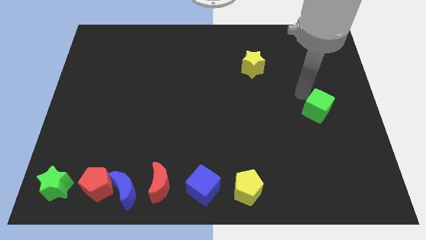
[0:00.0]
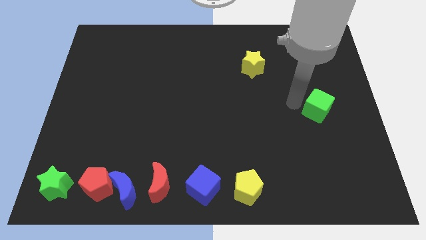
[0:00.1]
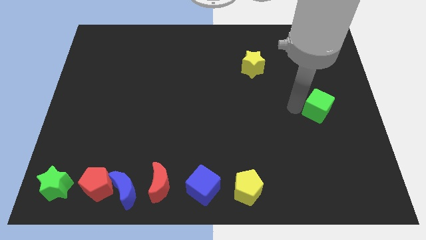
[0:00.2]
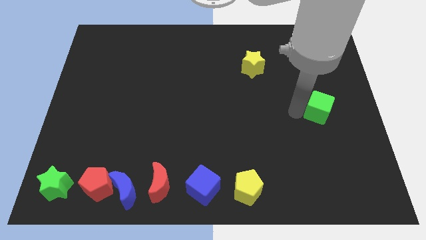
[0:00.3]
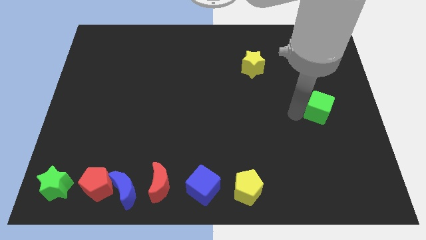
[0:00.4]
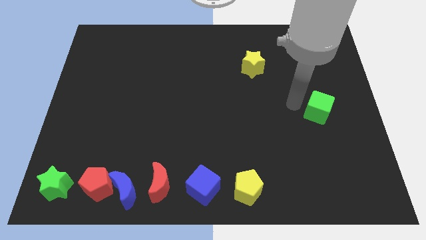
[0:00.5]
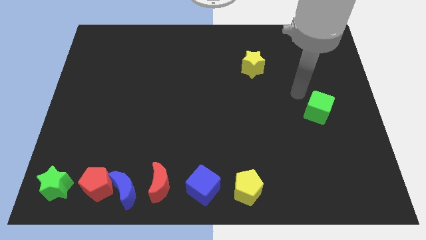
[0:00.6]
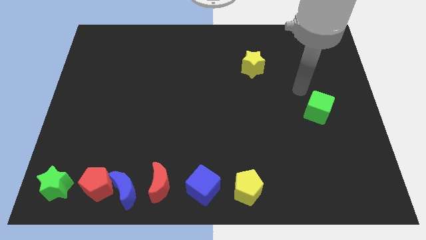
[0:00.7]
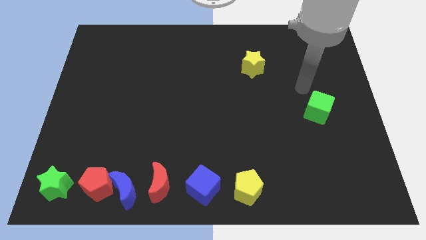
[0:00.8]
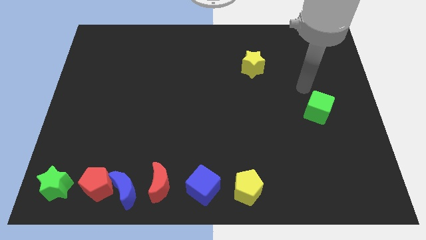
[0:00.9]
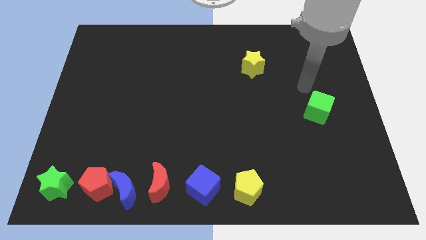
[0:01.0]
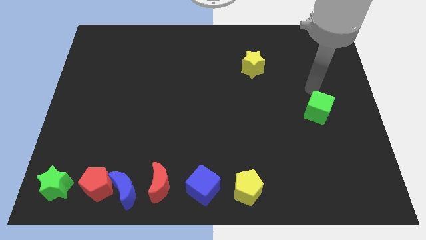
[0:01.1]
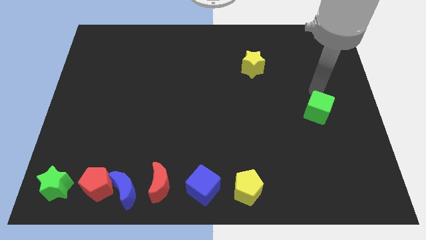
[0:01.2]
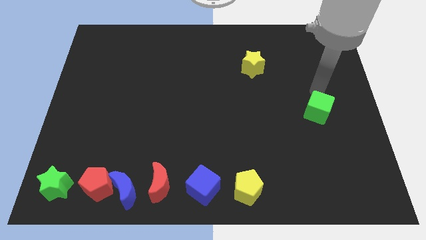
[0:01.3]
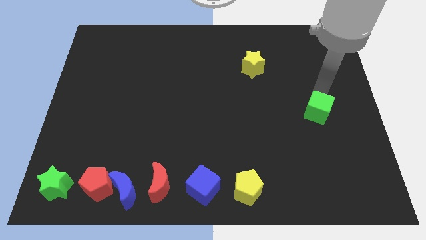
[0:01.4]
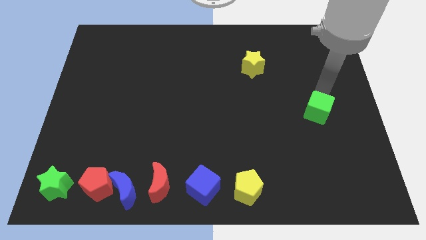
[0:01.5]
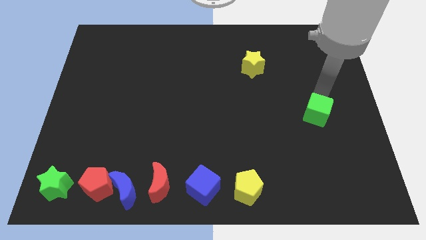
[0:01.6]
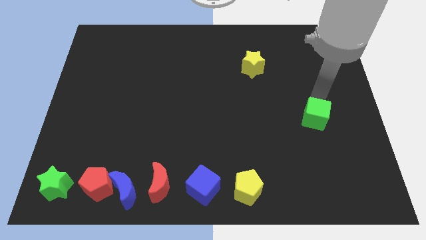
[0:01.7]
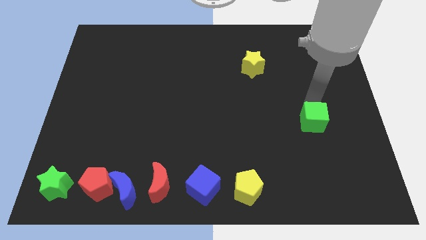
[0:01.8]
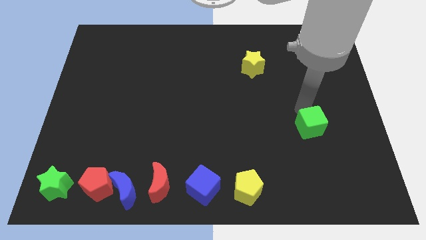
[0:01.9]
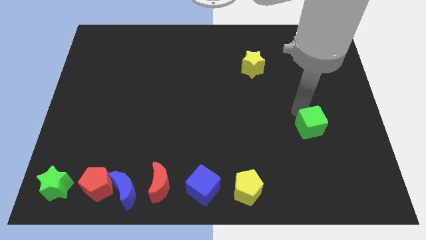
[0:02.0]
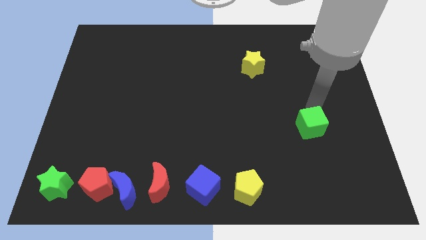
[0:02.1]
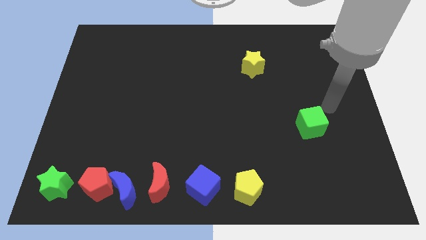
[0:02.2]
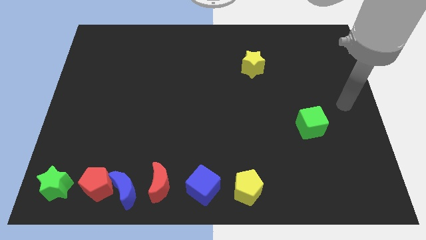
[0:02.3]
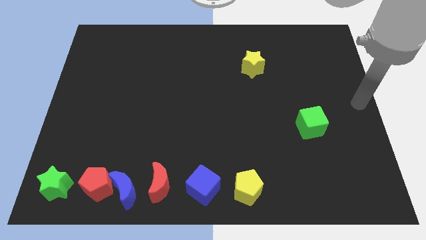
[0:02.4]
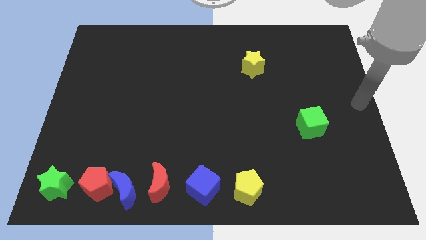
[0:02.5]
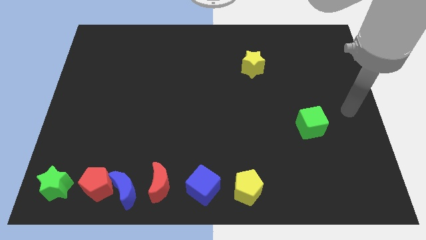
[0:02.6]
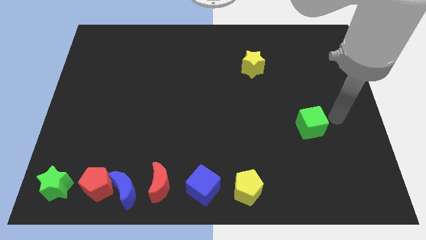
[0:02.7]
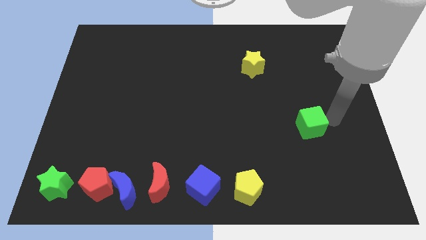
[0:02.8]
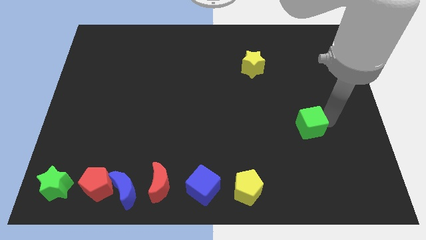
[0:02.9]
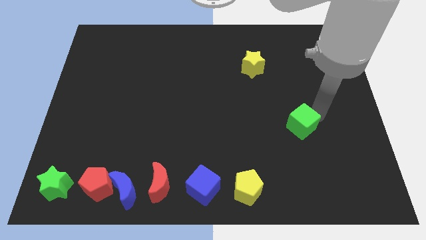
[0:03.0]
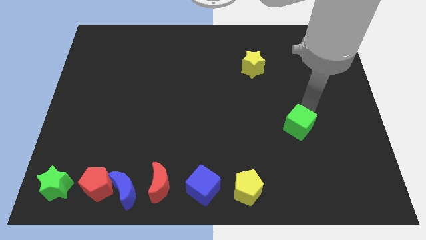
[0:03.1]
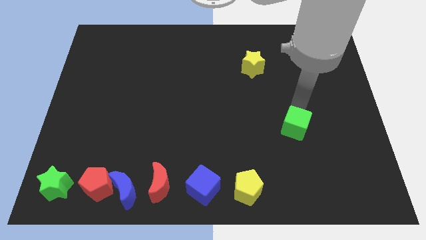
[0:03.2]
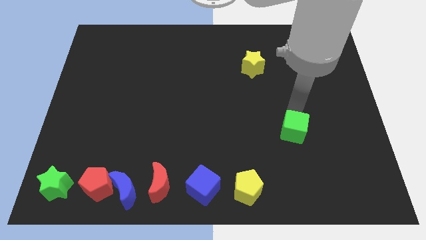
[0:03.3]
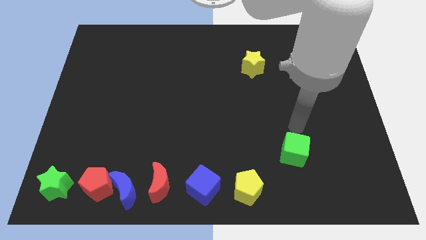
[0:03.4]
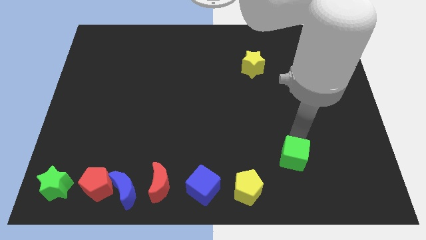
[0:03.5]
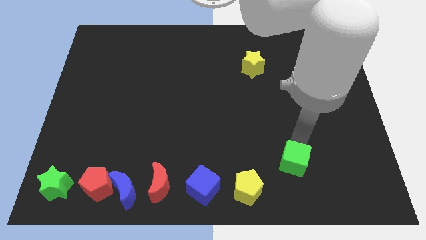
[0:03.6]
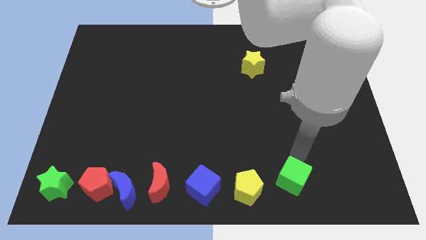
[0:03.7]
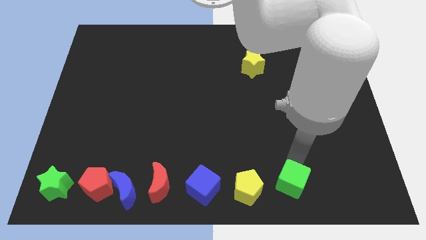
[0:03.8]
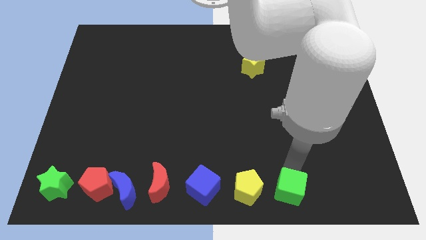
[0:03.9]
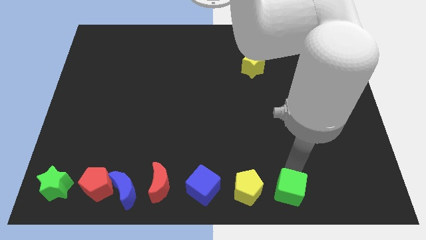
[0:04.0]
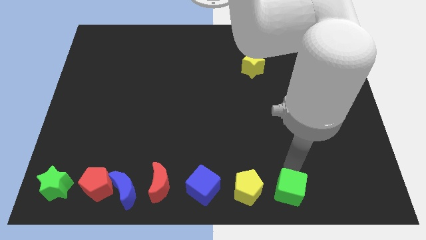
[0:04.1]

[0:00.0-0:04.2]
push the green cube right to the bottom right

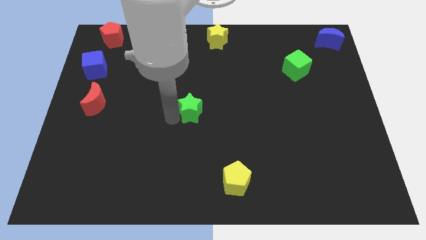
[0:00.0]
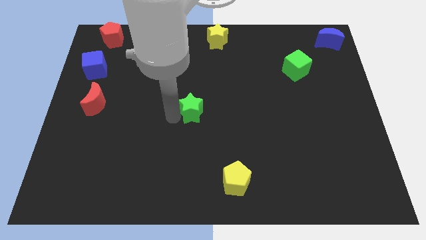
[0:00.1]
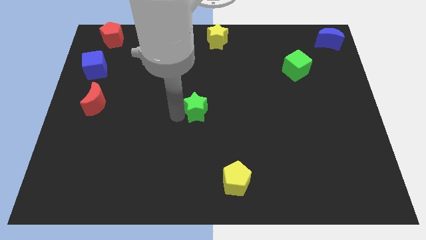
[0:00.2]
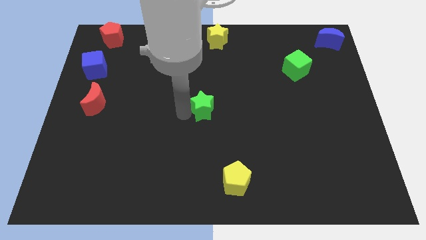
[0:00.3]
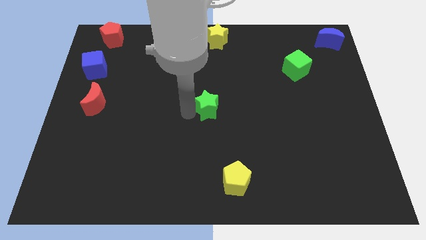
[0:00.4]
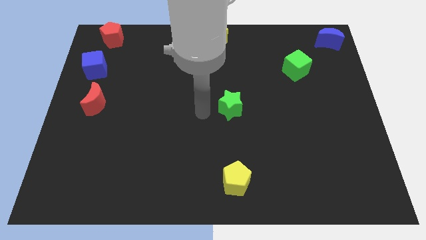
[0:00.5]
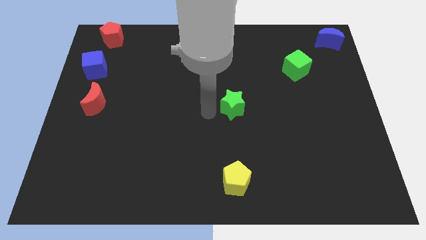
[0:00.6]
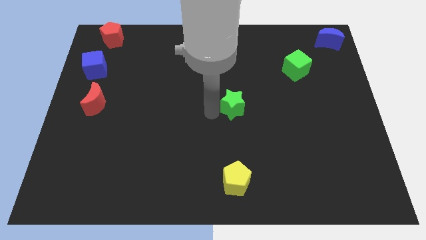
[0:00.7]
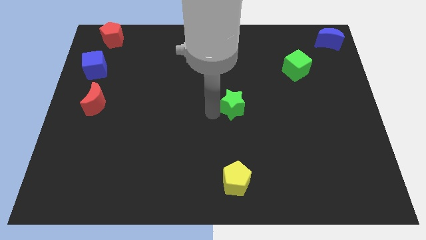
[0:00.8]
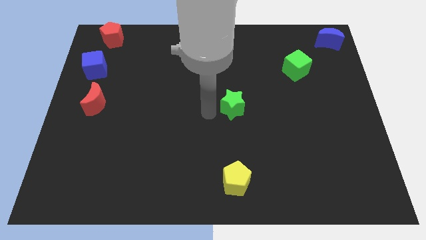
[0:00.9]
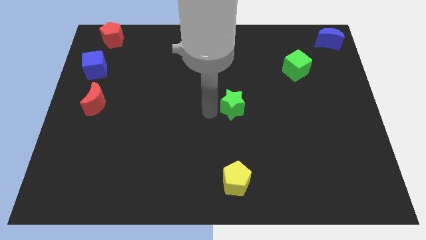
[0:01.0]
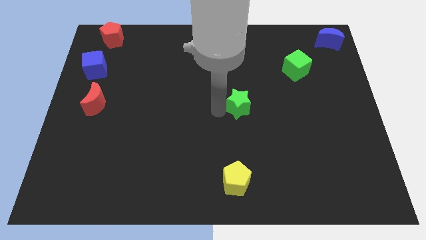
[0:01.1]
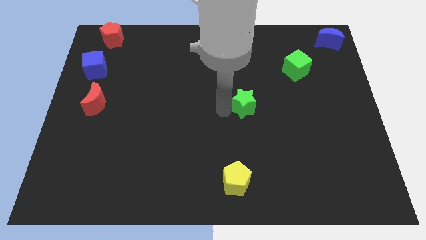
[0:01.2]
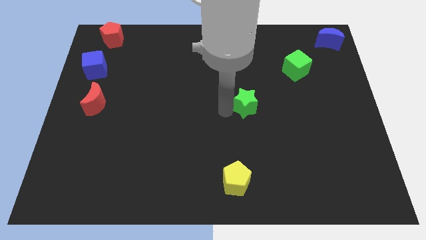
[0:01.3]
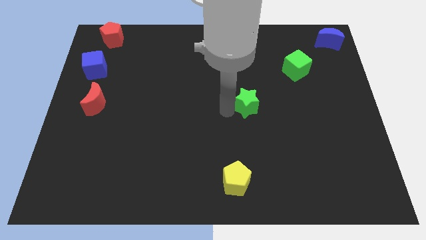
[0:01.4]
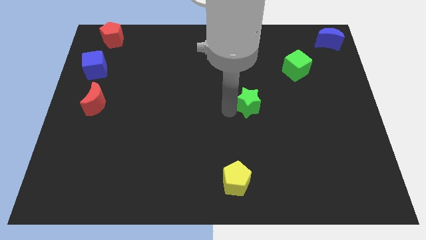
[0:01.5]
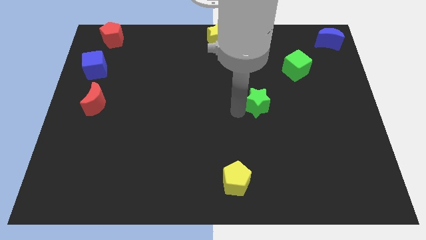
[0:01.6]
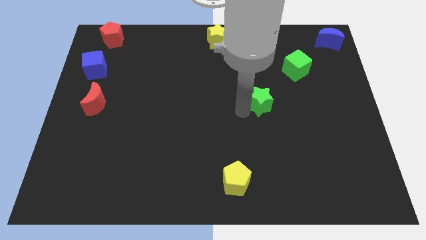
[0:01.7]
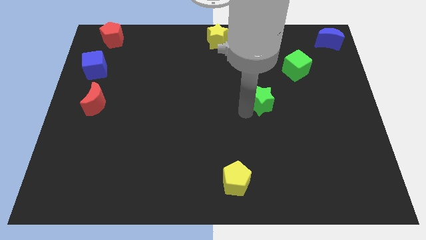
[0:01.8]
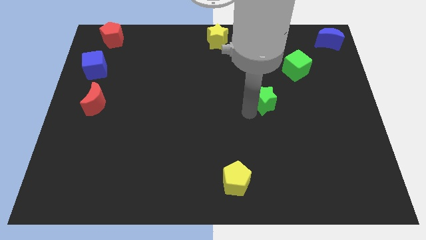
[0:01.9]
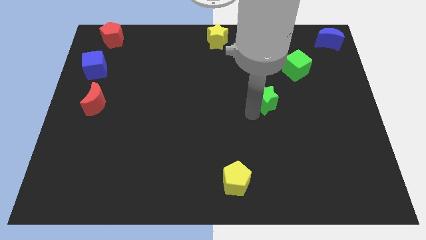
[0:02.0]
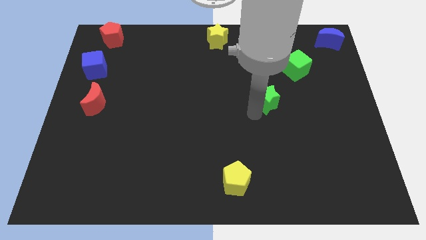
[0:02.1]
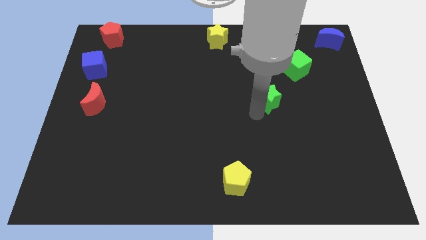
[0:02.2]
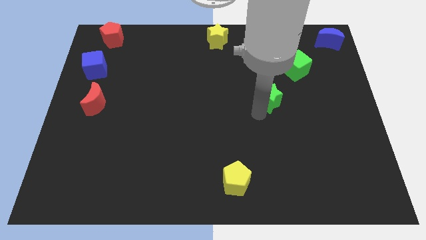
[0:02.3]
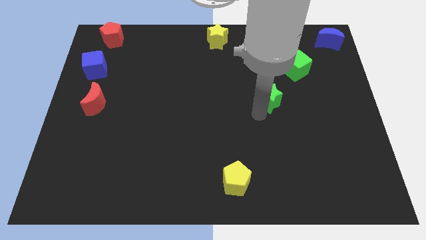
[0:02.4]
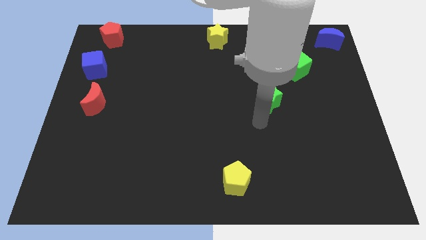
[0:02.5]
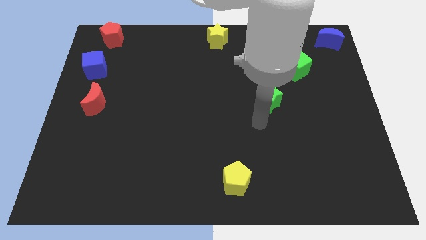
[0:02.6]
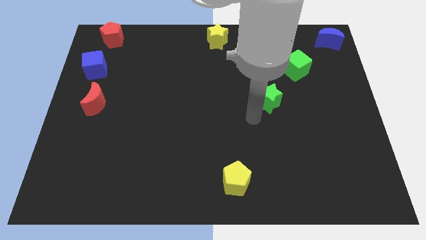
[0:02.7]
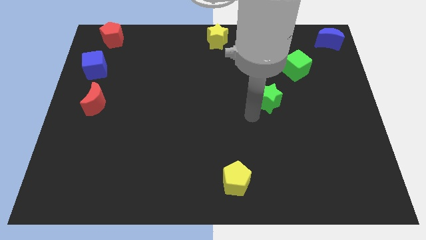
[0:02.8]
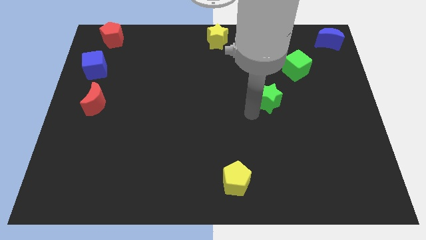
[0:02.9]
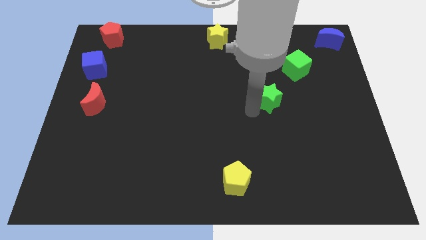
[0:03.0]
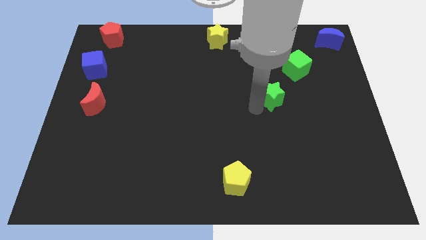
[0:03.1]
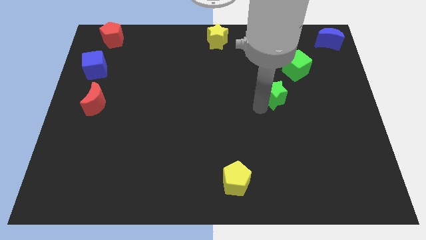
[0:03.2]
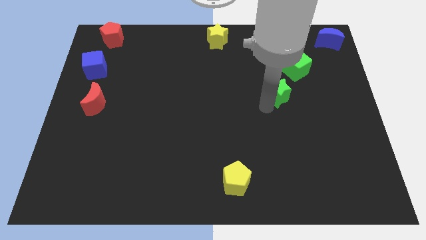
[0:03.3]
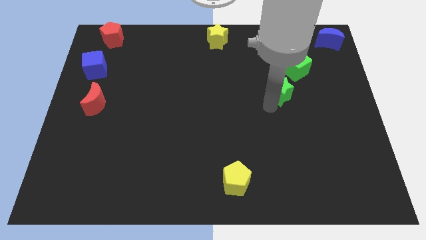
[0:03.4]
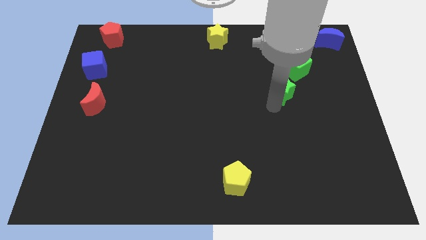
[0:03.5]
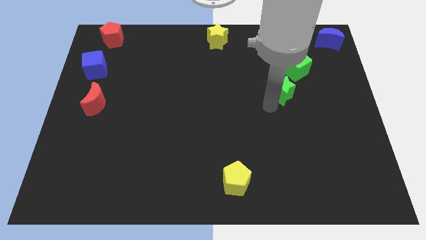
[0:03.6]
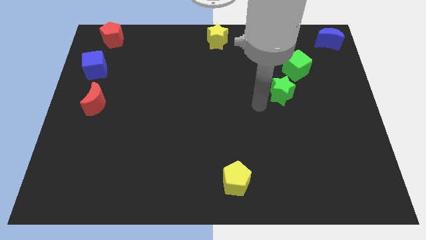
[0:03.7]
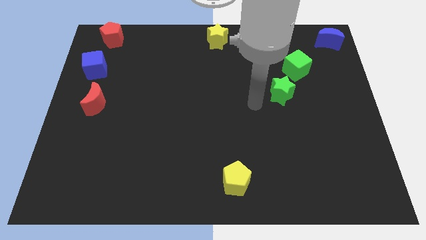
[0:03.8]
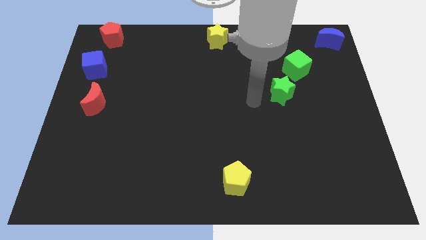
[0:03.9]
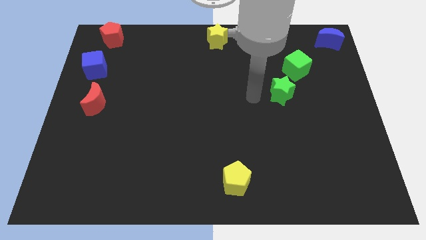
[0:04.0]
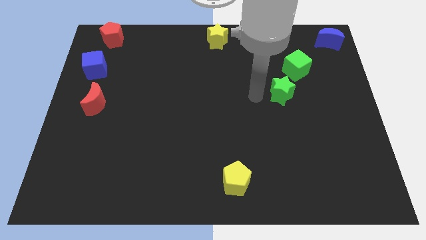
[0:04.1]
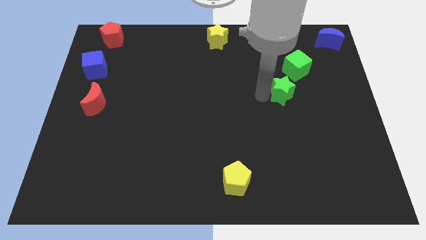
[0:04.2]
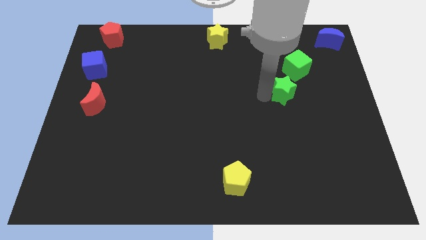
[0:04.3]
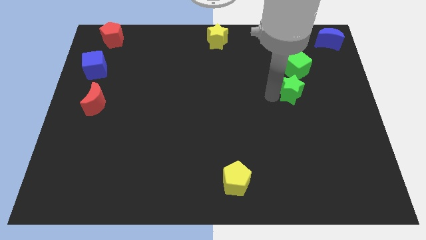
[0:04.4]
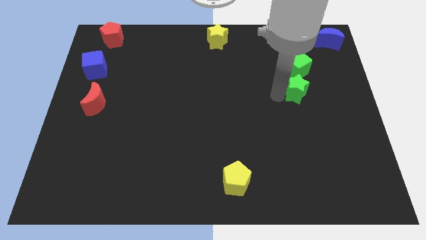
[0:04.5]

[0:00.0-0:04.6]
move green star towards green cube

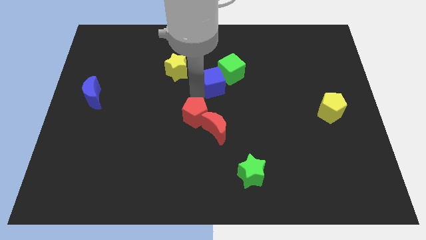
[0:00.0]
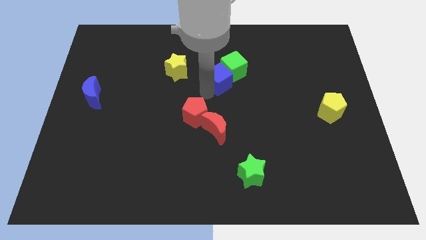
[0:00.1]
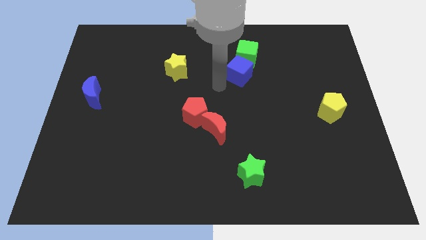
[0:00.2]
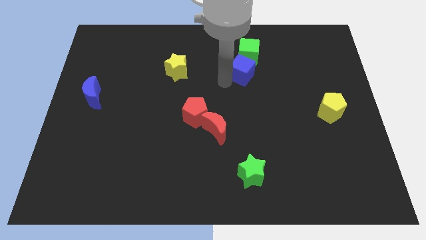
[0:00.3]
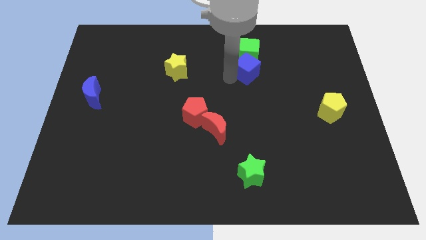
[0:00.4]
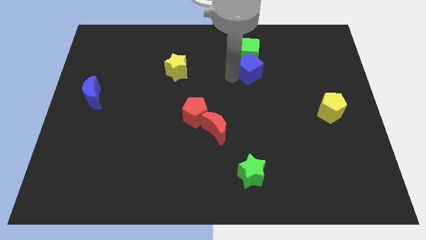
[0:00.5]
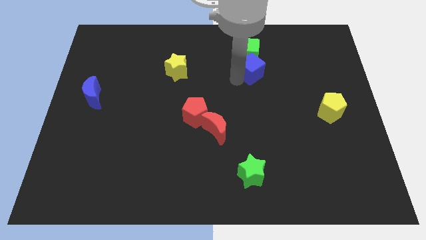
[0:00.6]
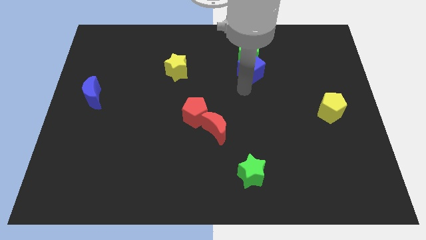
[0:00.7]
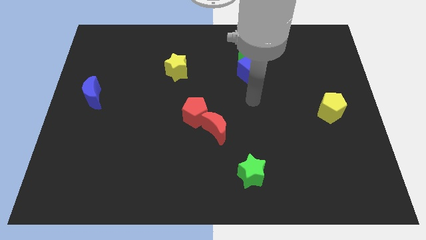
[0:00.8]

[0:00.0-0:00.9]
push the blue cube into green cube
